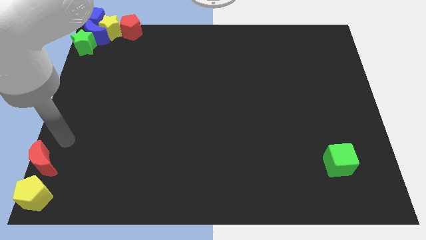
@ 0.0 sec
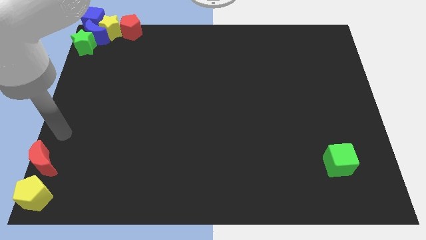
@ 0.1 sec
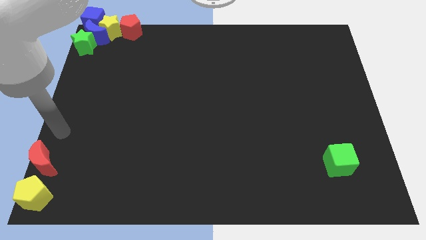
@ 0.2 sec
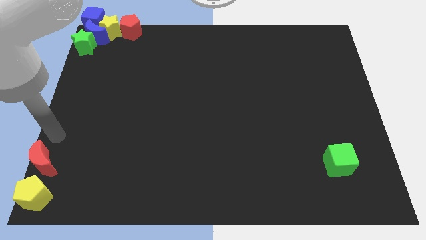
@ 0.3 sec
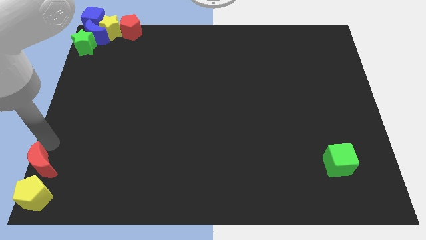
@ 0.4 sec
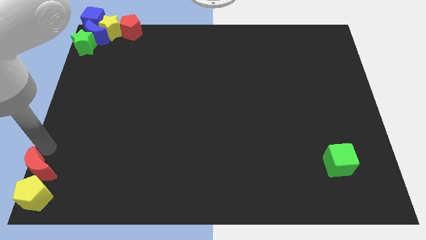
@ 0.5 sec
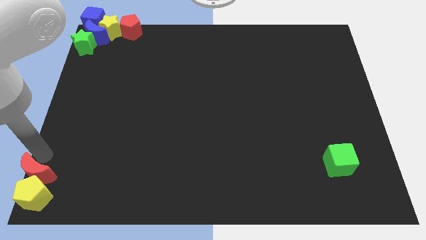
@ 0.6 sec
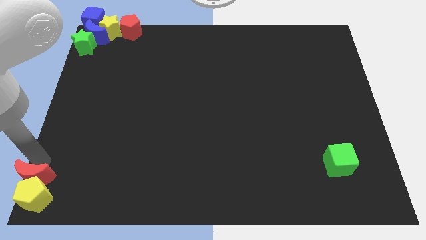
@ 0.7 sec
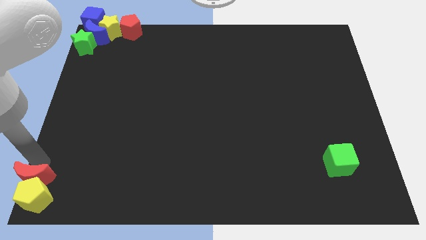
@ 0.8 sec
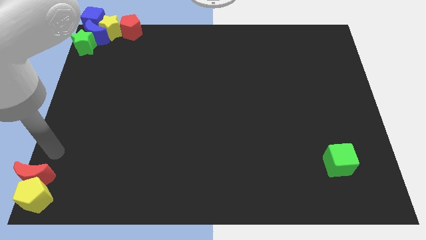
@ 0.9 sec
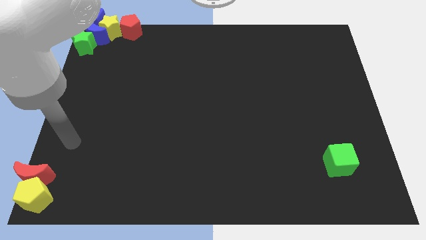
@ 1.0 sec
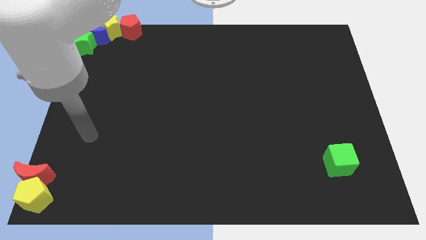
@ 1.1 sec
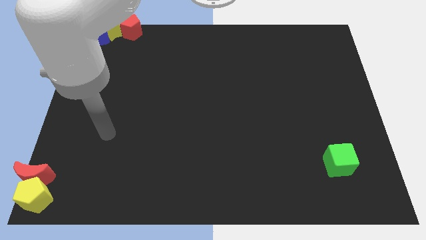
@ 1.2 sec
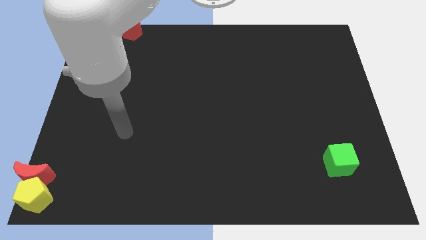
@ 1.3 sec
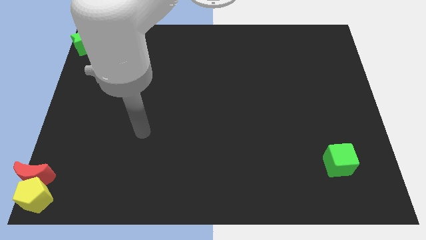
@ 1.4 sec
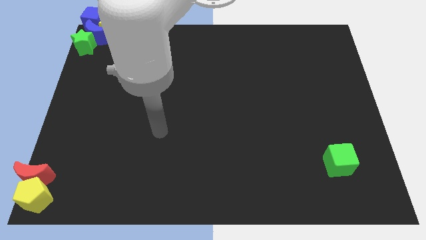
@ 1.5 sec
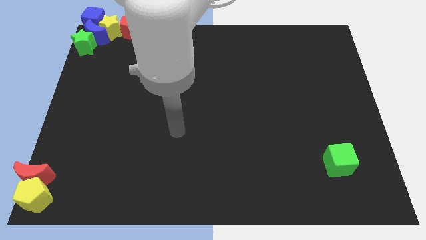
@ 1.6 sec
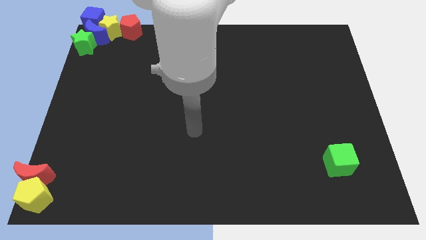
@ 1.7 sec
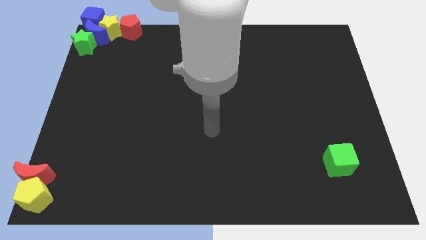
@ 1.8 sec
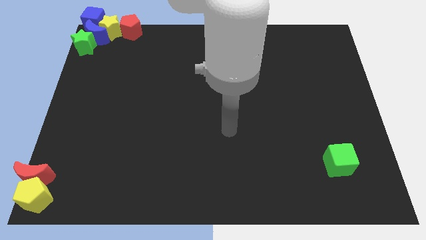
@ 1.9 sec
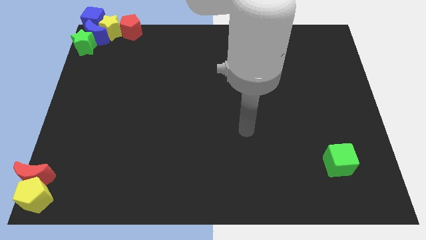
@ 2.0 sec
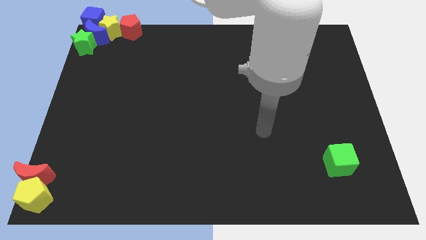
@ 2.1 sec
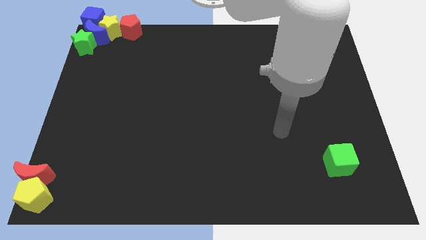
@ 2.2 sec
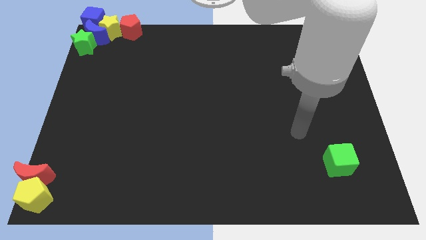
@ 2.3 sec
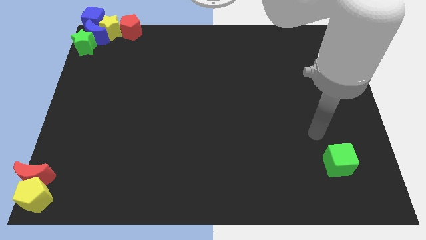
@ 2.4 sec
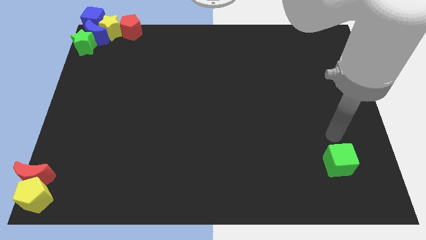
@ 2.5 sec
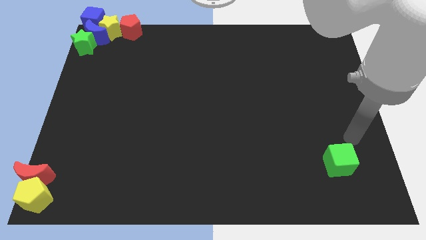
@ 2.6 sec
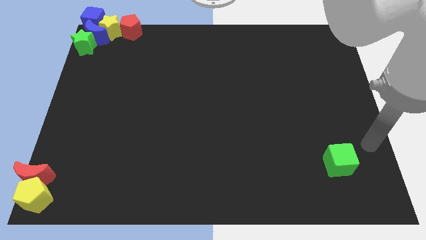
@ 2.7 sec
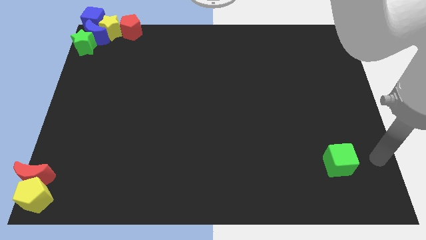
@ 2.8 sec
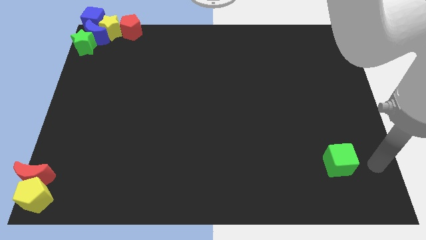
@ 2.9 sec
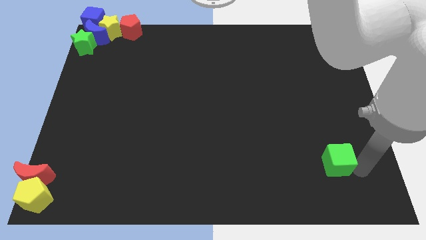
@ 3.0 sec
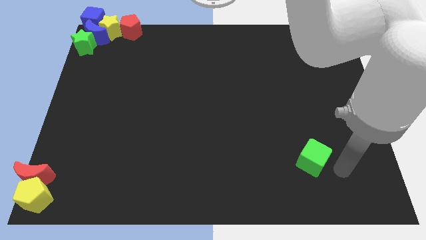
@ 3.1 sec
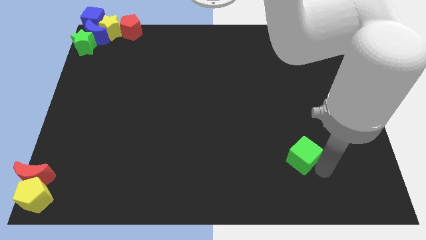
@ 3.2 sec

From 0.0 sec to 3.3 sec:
place the red crescent into the yellow pentagon

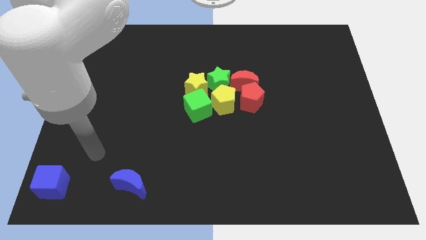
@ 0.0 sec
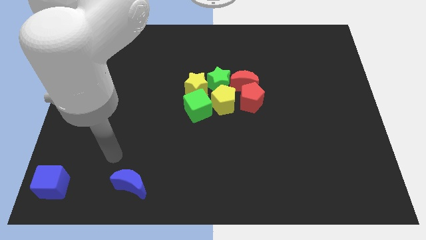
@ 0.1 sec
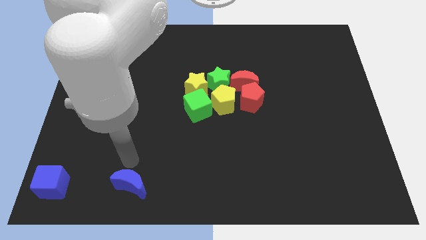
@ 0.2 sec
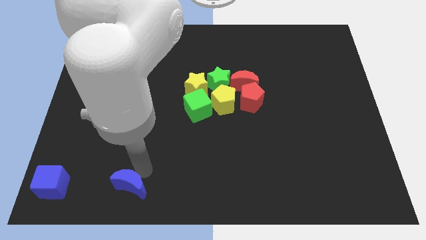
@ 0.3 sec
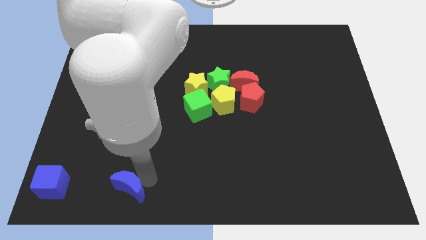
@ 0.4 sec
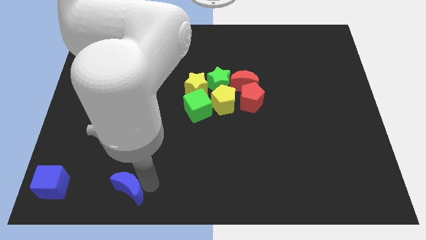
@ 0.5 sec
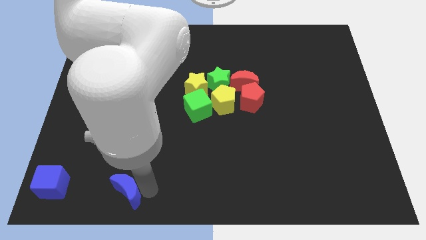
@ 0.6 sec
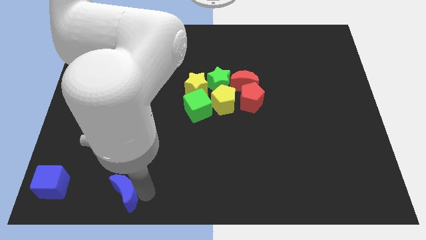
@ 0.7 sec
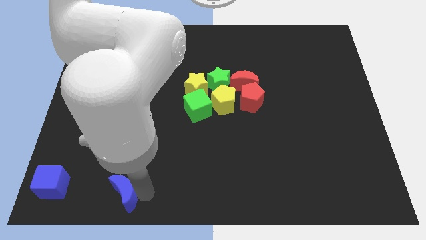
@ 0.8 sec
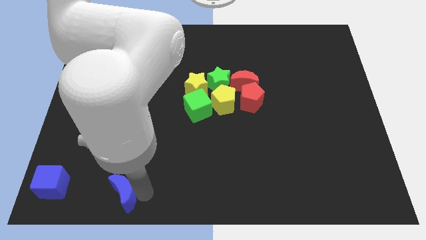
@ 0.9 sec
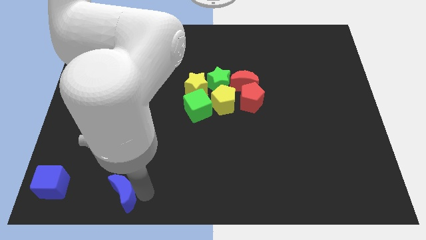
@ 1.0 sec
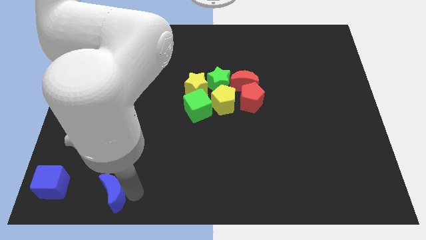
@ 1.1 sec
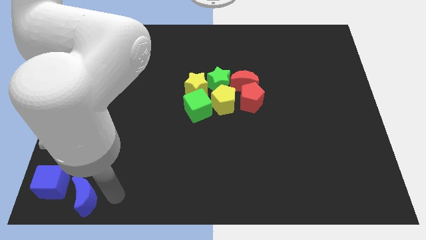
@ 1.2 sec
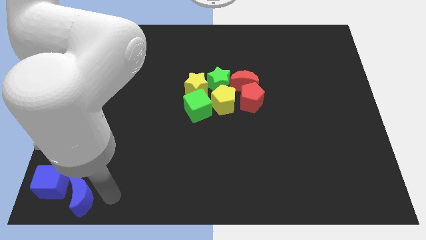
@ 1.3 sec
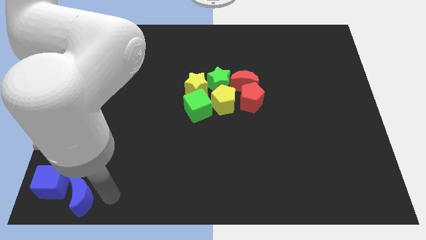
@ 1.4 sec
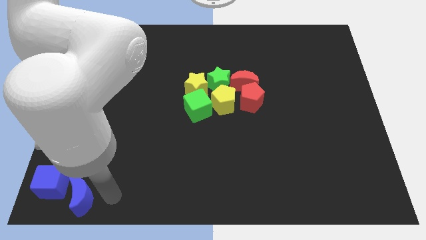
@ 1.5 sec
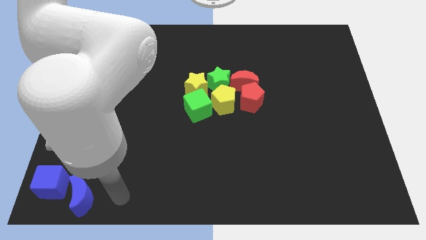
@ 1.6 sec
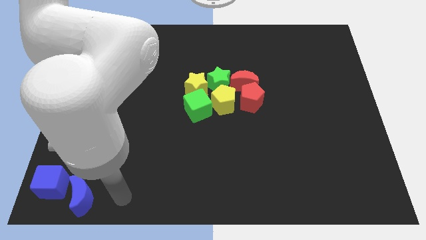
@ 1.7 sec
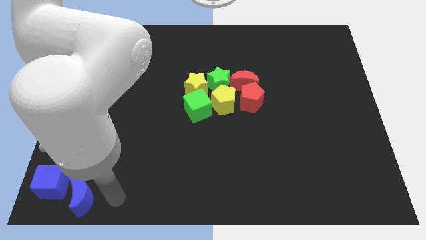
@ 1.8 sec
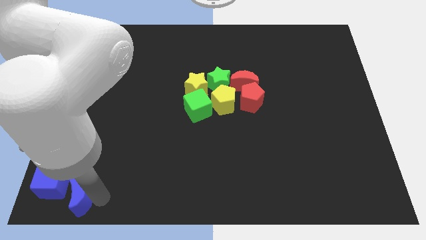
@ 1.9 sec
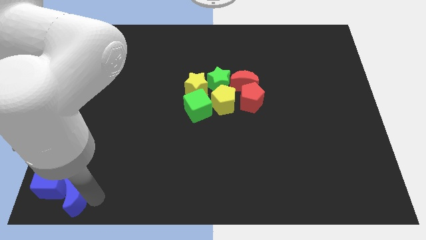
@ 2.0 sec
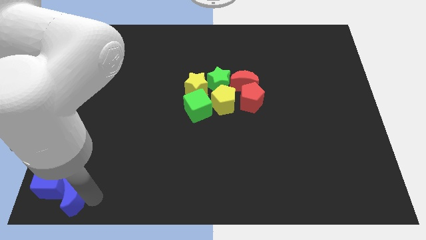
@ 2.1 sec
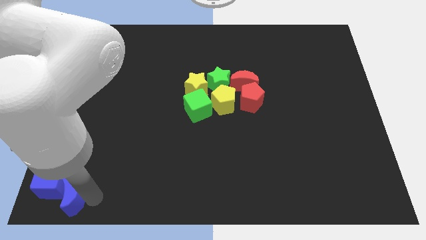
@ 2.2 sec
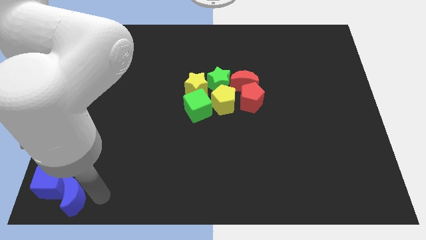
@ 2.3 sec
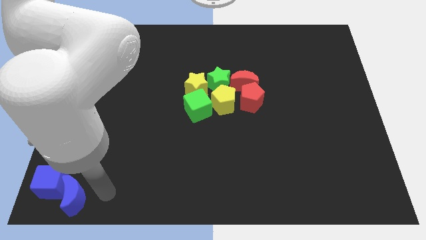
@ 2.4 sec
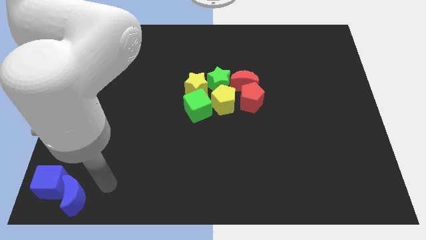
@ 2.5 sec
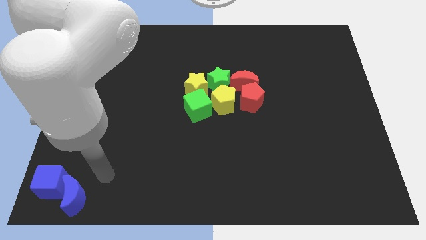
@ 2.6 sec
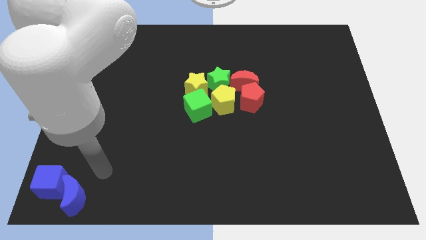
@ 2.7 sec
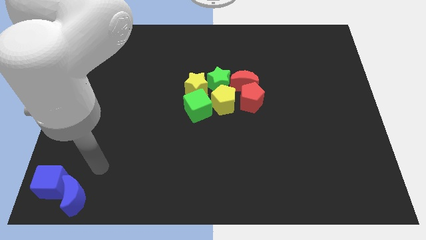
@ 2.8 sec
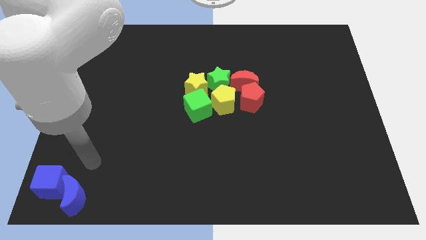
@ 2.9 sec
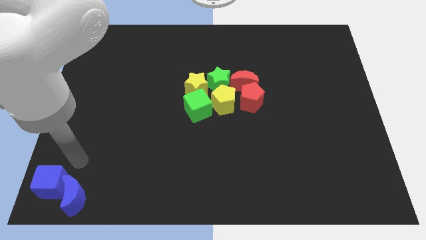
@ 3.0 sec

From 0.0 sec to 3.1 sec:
push the blue moon into the right side of the blue cube

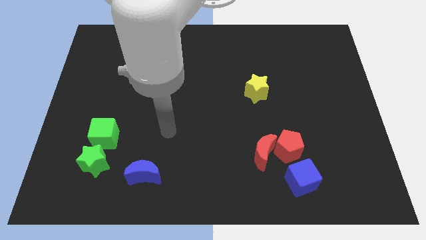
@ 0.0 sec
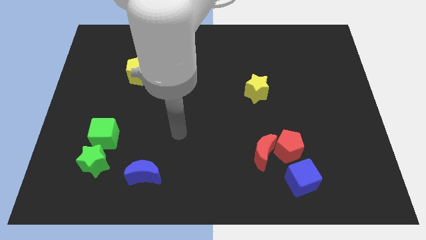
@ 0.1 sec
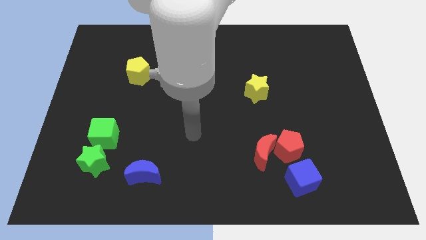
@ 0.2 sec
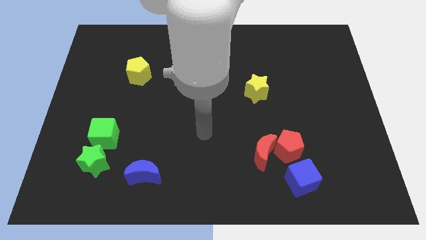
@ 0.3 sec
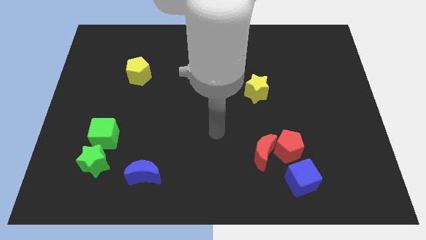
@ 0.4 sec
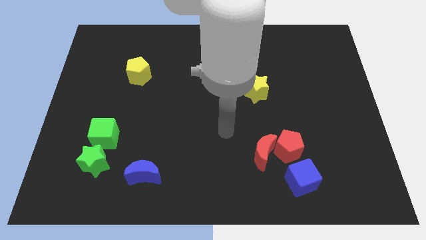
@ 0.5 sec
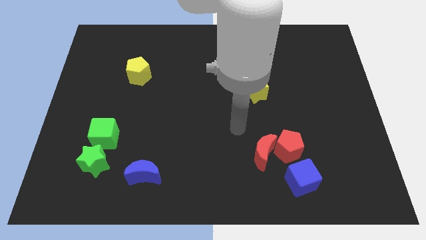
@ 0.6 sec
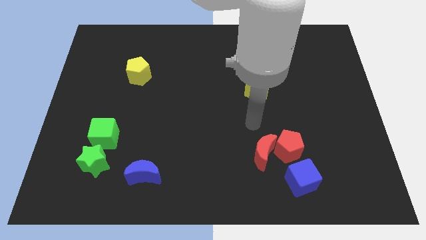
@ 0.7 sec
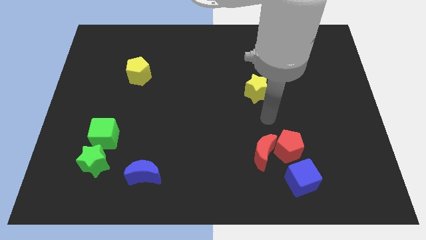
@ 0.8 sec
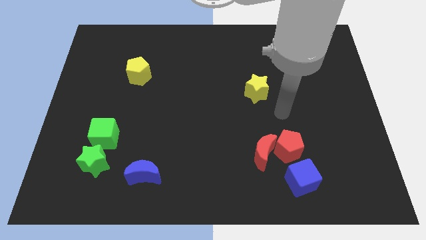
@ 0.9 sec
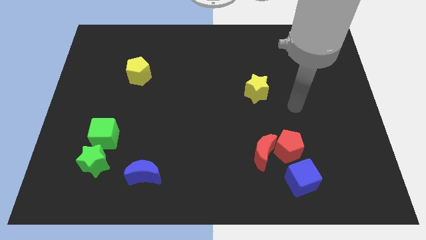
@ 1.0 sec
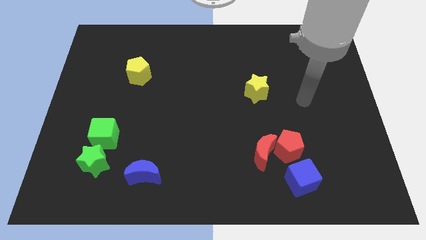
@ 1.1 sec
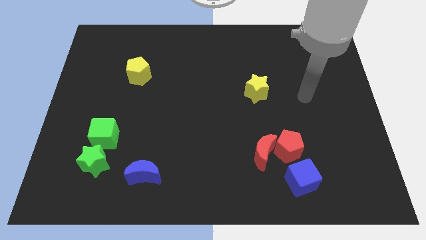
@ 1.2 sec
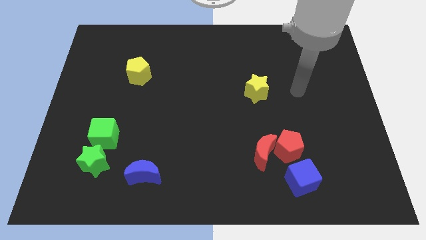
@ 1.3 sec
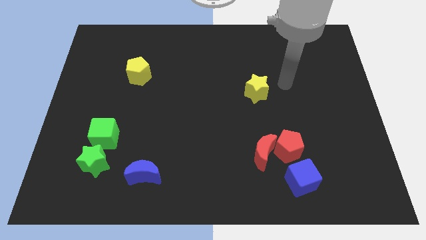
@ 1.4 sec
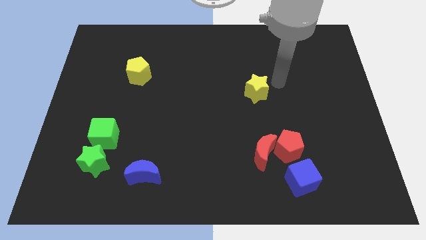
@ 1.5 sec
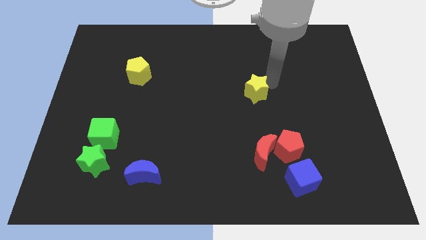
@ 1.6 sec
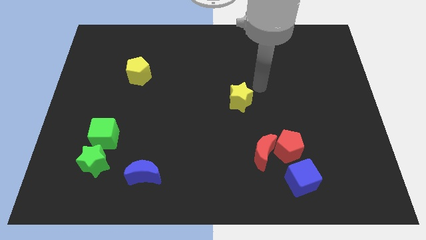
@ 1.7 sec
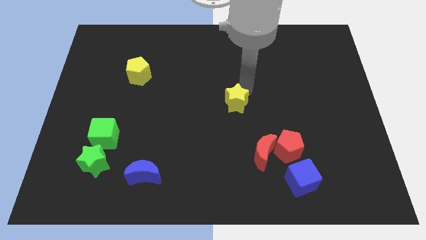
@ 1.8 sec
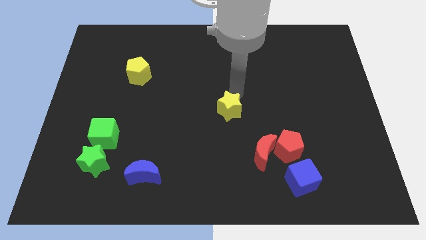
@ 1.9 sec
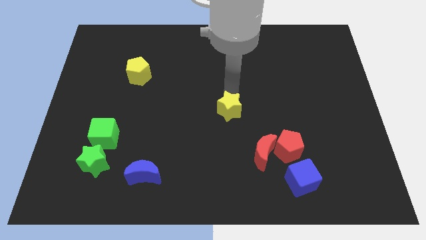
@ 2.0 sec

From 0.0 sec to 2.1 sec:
place yellow star in the center

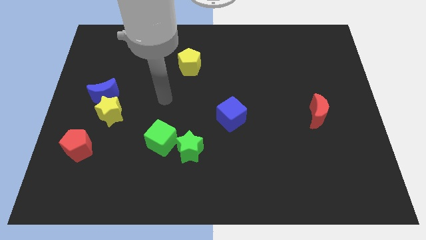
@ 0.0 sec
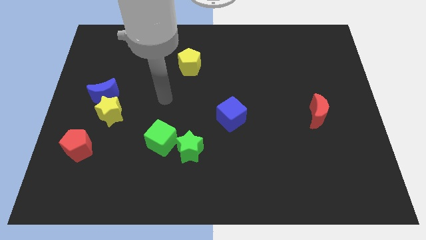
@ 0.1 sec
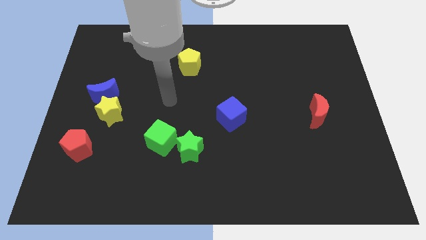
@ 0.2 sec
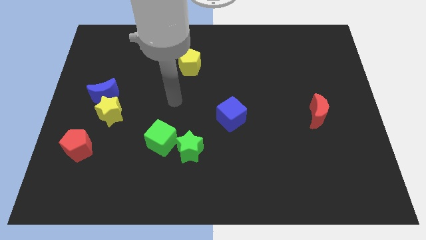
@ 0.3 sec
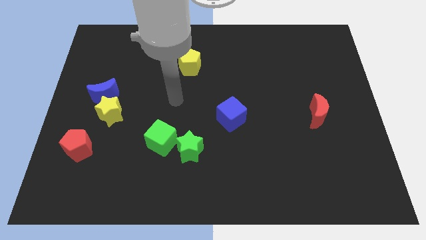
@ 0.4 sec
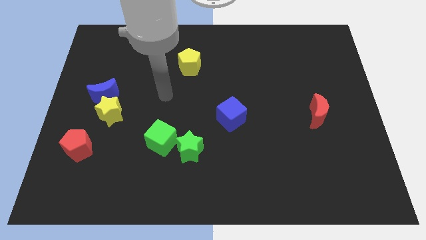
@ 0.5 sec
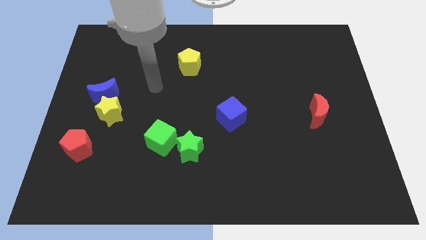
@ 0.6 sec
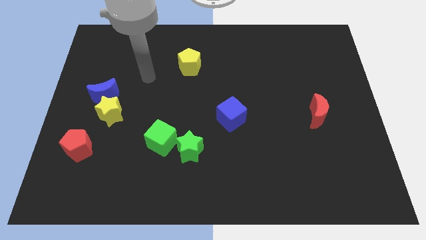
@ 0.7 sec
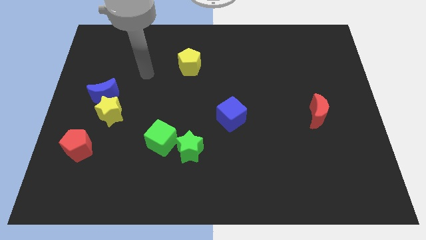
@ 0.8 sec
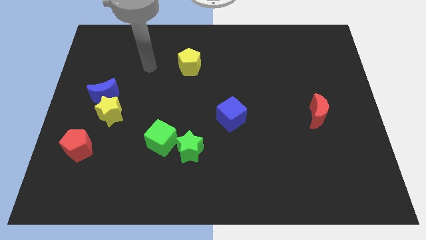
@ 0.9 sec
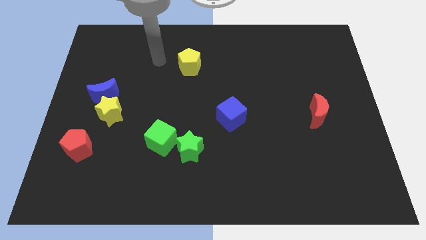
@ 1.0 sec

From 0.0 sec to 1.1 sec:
slide your arm to the left of yellow pentagon
